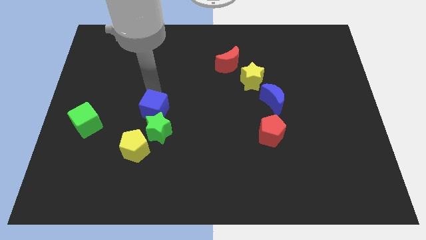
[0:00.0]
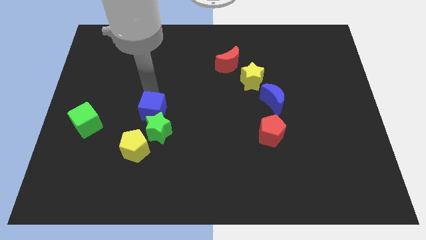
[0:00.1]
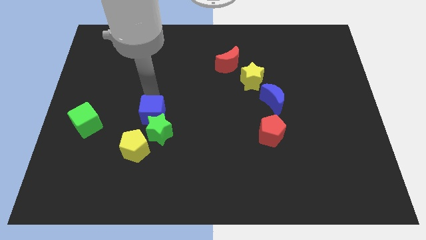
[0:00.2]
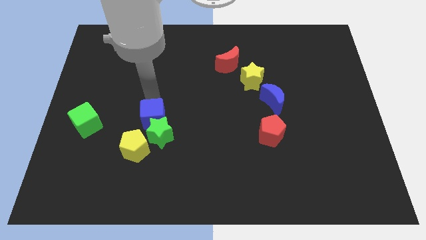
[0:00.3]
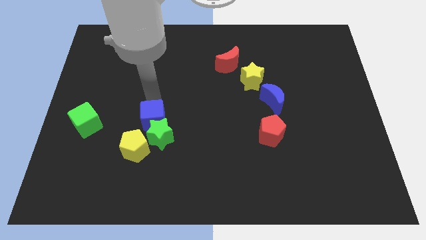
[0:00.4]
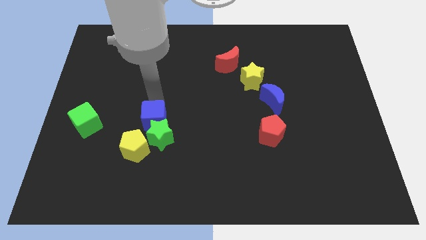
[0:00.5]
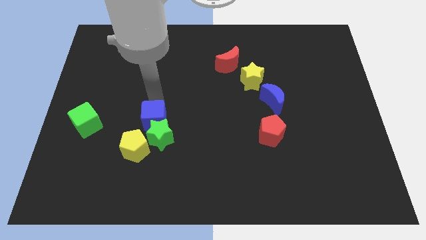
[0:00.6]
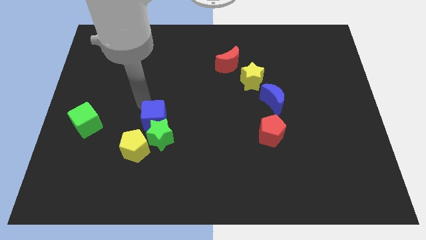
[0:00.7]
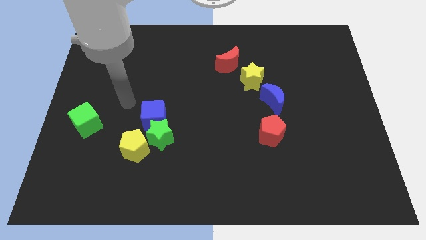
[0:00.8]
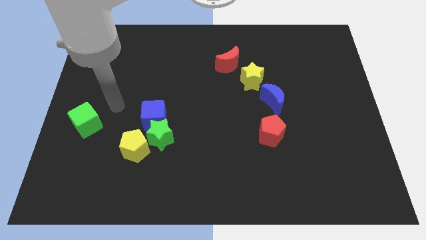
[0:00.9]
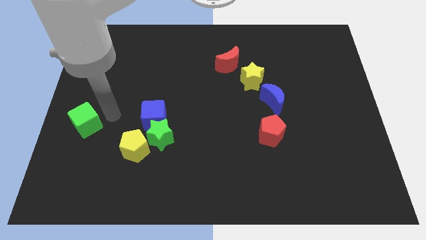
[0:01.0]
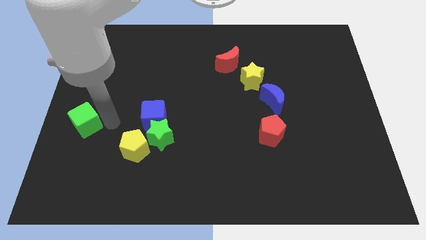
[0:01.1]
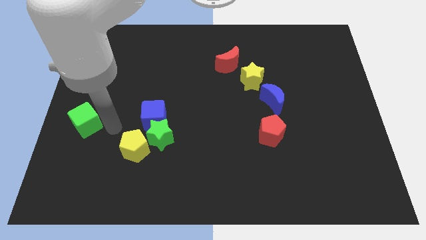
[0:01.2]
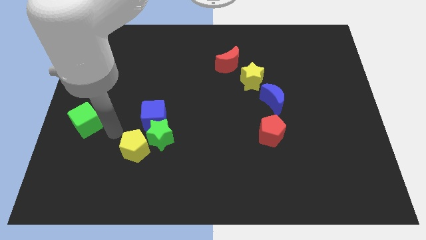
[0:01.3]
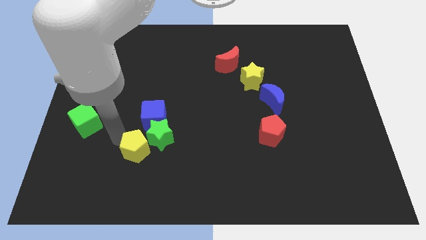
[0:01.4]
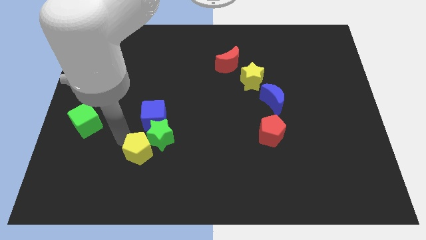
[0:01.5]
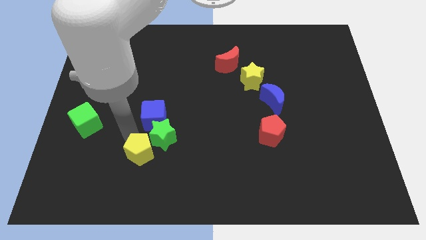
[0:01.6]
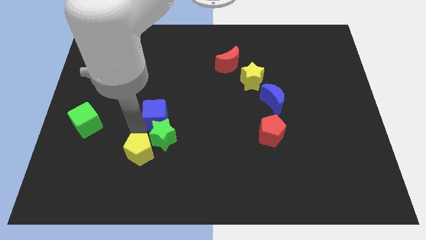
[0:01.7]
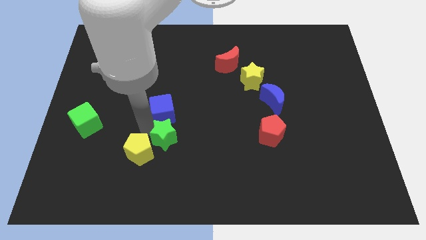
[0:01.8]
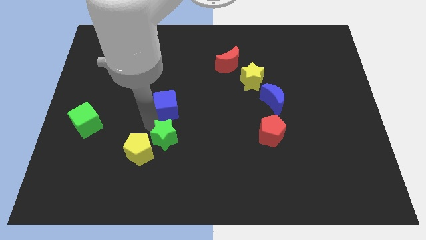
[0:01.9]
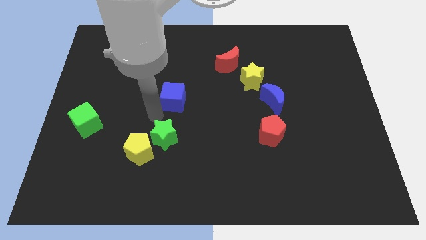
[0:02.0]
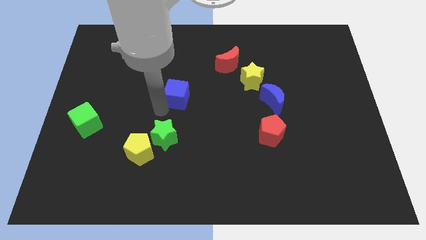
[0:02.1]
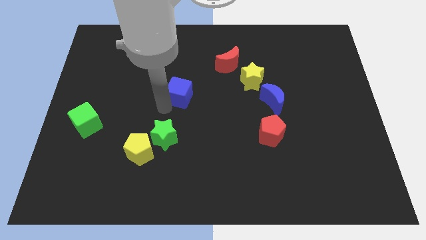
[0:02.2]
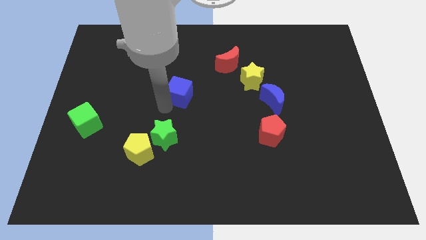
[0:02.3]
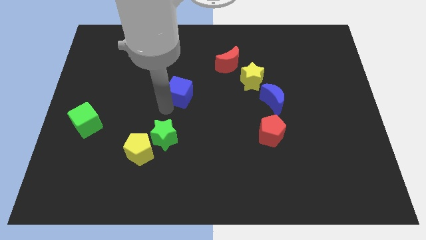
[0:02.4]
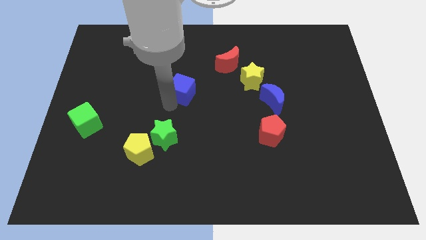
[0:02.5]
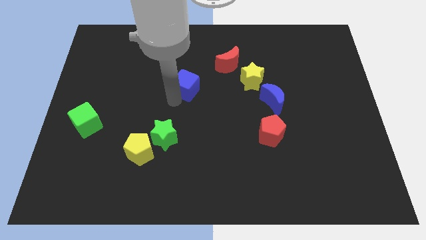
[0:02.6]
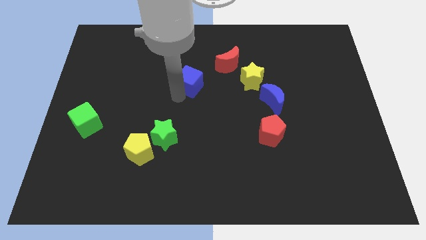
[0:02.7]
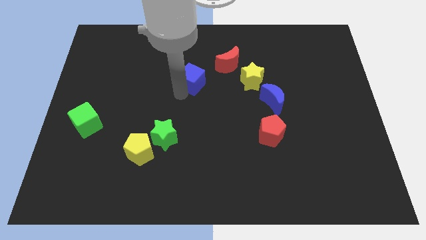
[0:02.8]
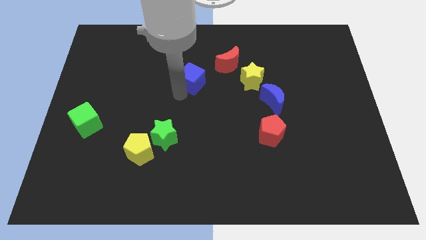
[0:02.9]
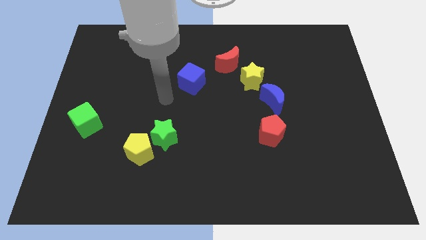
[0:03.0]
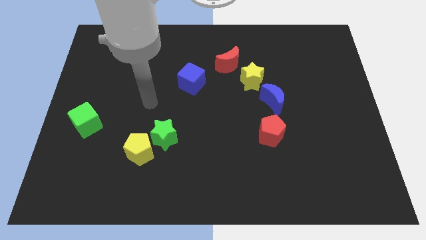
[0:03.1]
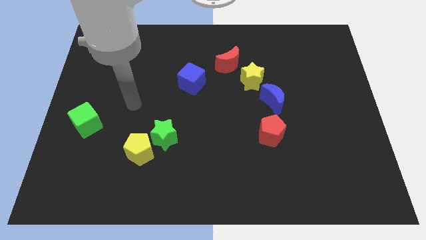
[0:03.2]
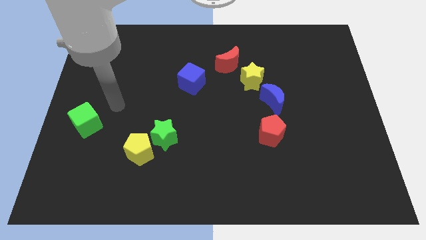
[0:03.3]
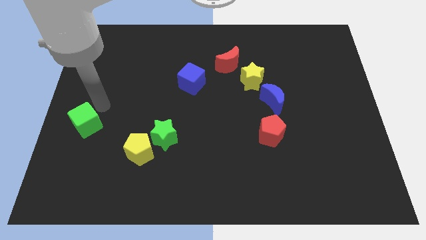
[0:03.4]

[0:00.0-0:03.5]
move blue cube towards red crescent

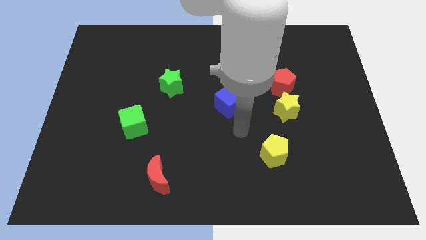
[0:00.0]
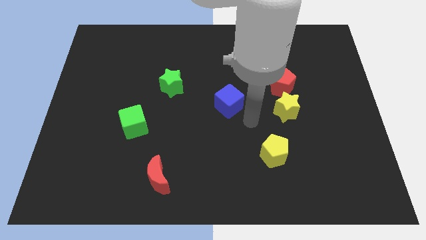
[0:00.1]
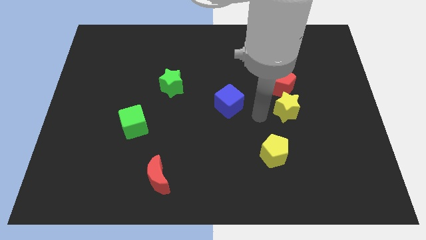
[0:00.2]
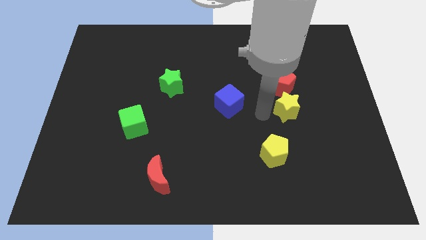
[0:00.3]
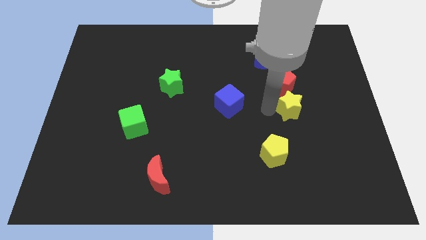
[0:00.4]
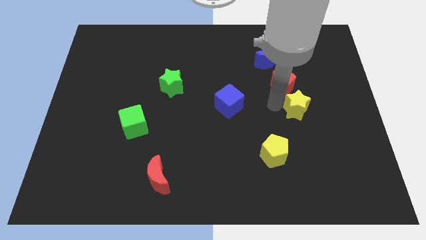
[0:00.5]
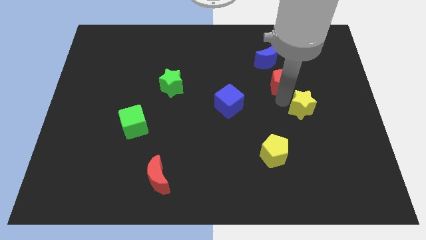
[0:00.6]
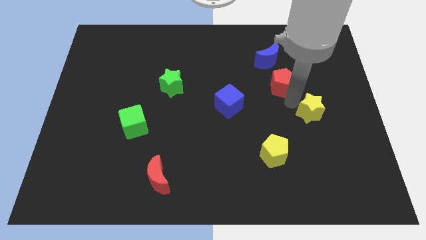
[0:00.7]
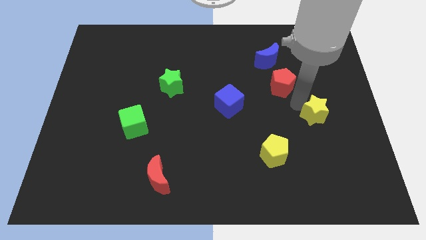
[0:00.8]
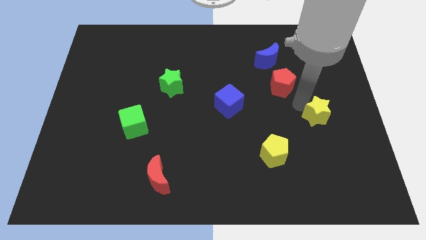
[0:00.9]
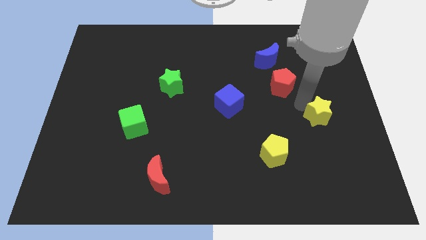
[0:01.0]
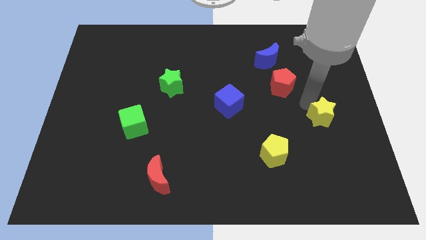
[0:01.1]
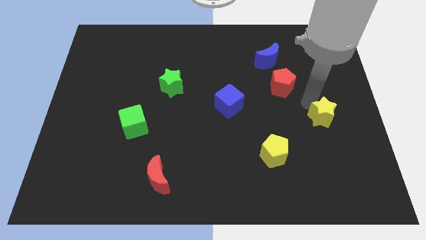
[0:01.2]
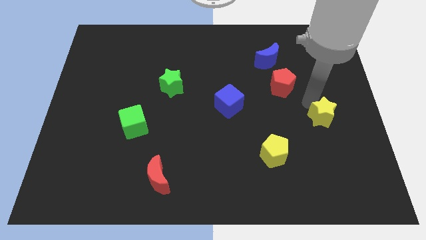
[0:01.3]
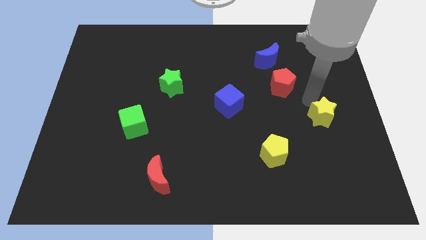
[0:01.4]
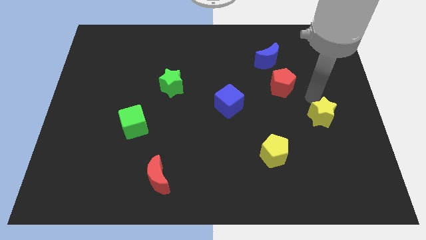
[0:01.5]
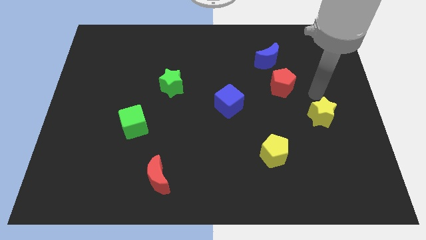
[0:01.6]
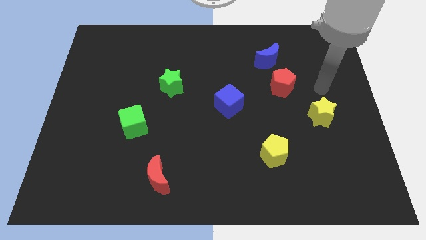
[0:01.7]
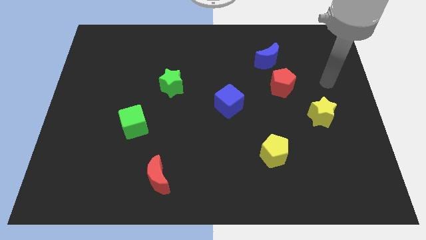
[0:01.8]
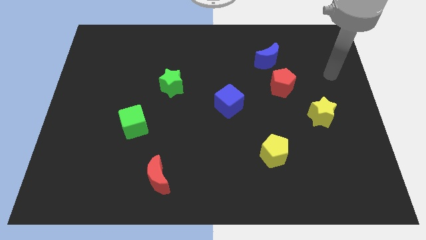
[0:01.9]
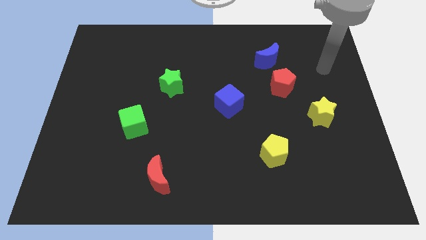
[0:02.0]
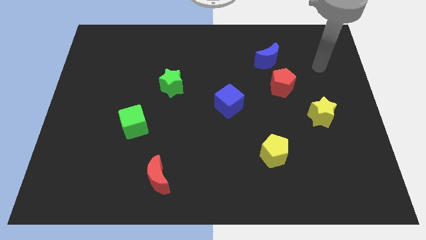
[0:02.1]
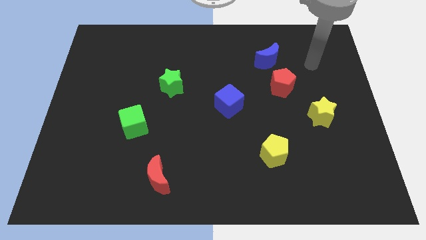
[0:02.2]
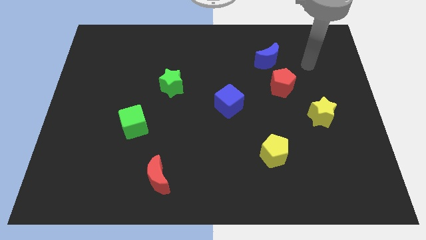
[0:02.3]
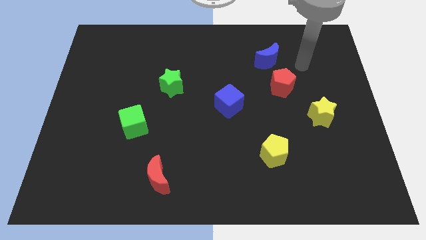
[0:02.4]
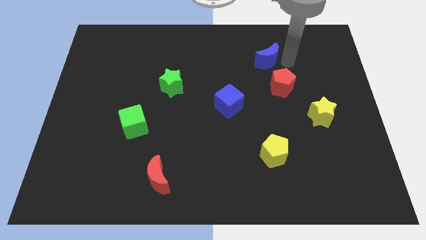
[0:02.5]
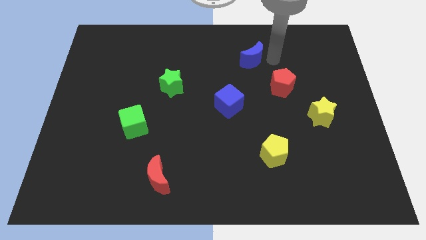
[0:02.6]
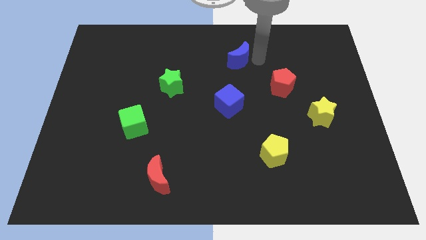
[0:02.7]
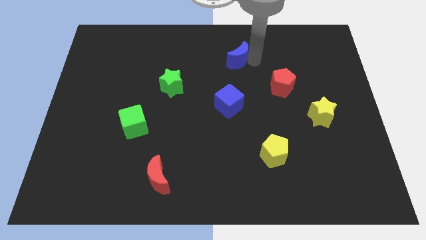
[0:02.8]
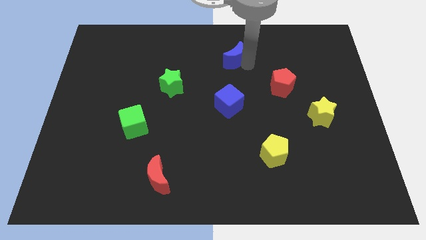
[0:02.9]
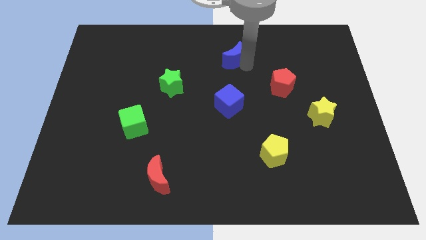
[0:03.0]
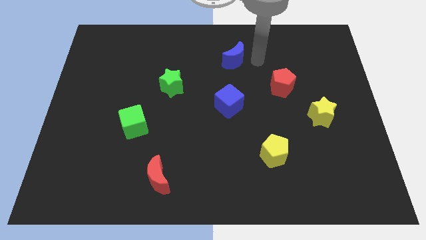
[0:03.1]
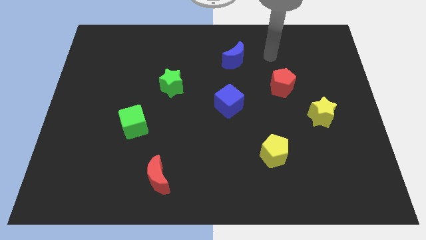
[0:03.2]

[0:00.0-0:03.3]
slightly move the blue crescent towards the top of the board

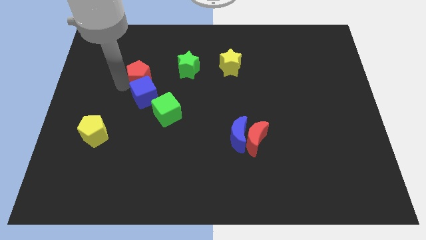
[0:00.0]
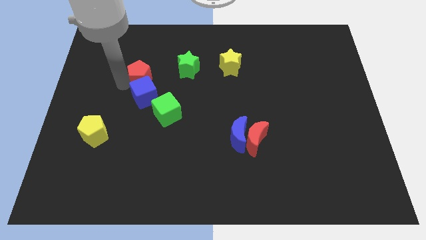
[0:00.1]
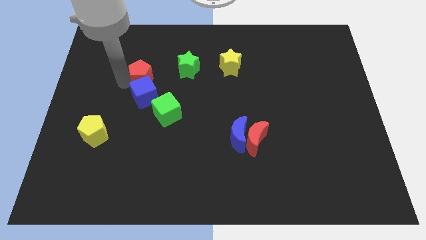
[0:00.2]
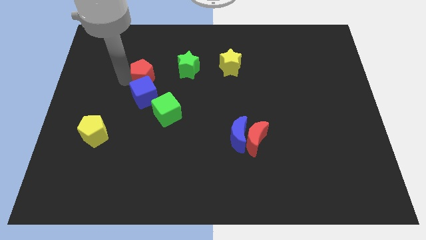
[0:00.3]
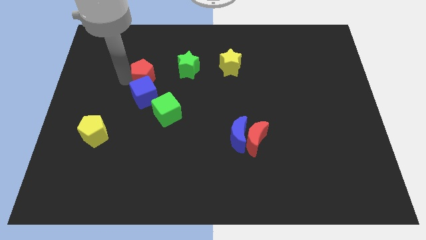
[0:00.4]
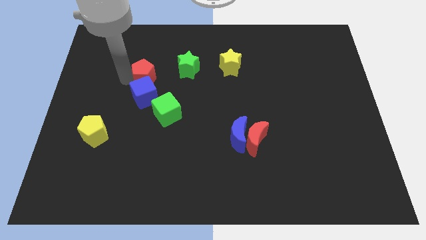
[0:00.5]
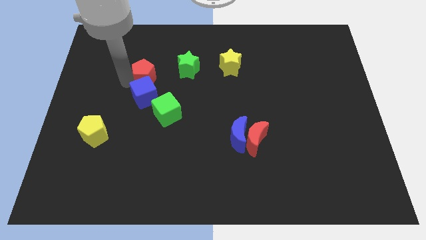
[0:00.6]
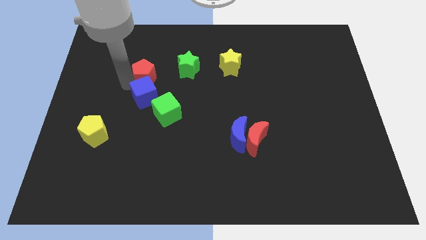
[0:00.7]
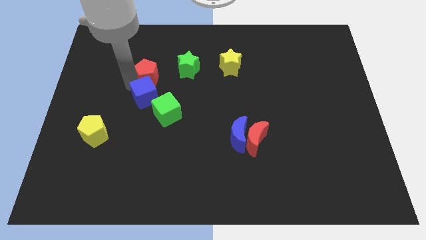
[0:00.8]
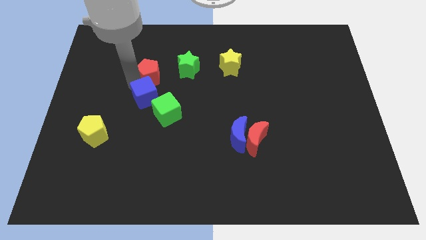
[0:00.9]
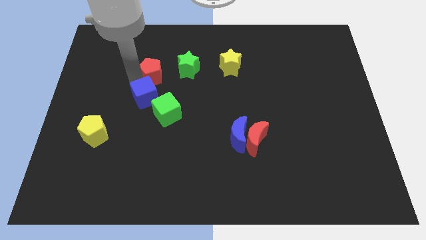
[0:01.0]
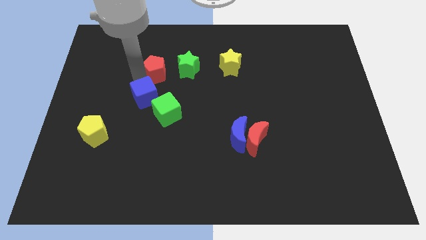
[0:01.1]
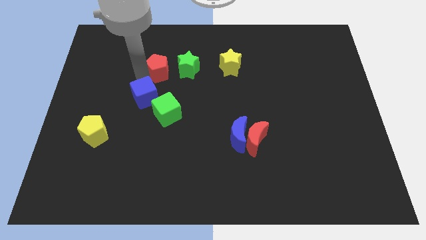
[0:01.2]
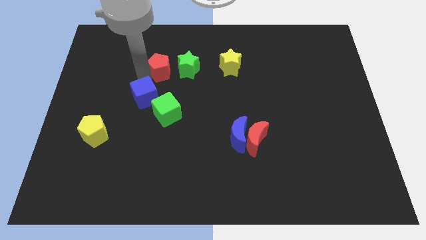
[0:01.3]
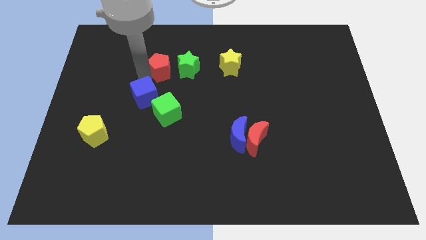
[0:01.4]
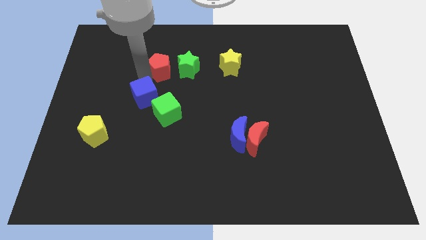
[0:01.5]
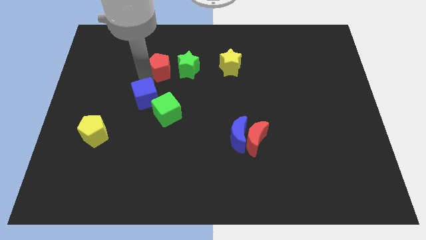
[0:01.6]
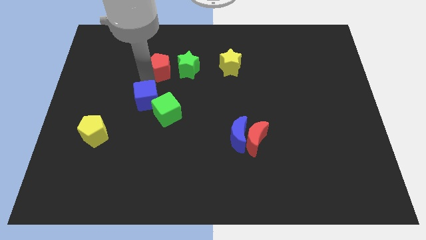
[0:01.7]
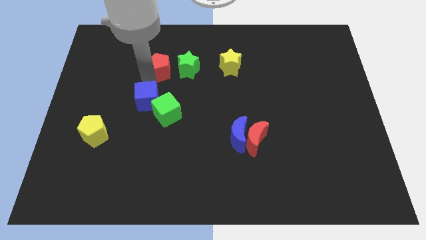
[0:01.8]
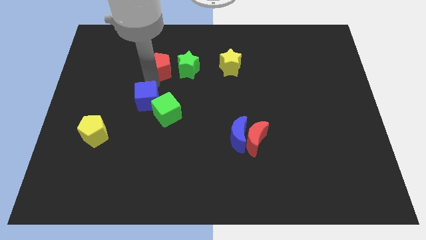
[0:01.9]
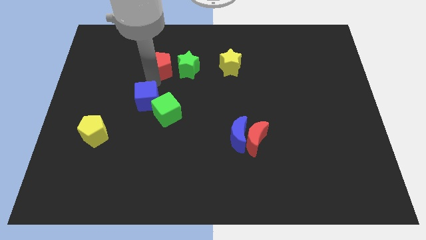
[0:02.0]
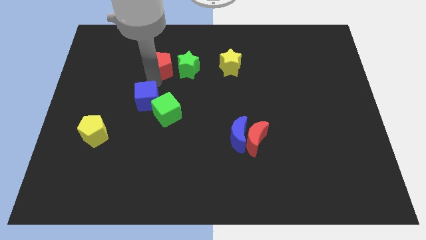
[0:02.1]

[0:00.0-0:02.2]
apart red pentagon from blue cube
